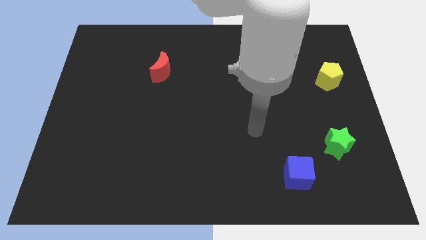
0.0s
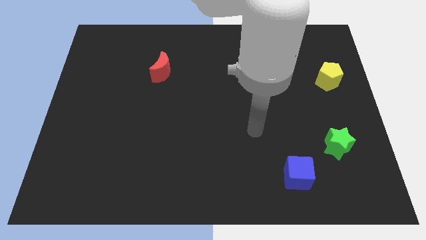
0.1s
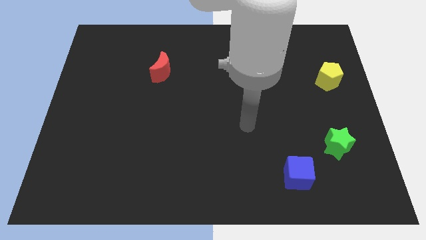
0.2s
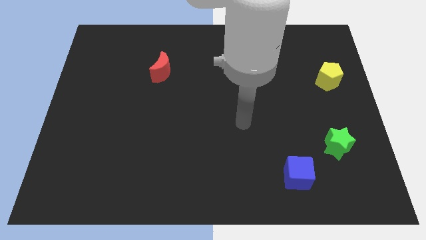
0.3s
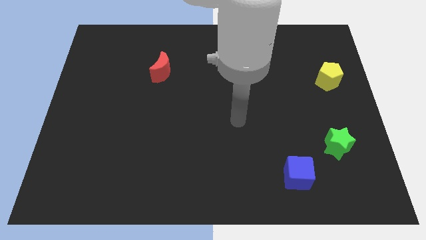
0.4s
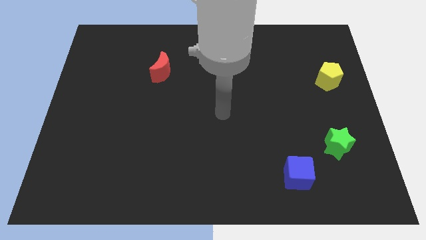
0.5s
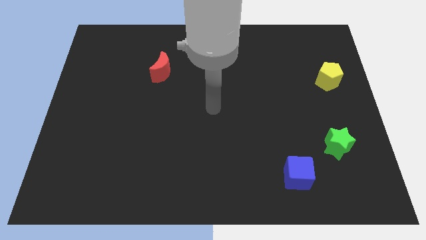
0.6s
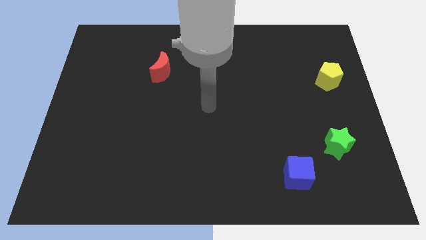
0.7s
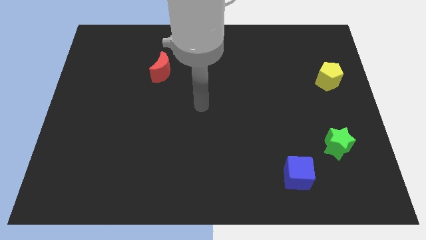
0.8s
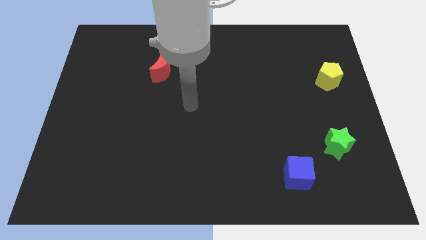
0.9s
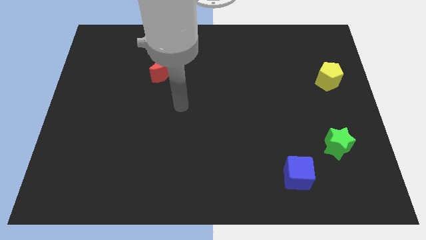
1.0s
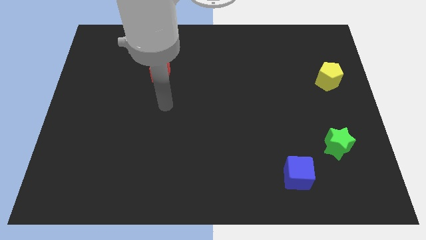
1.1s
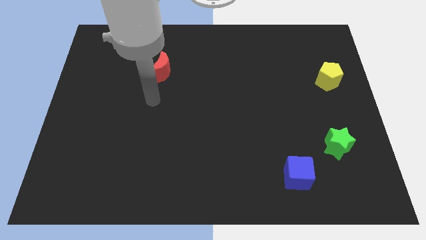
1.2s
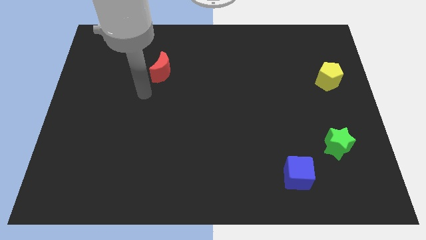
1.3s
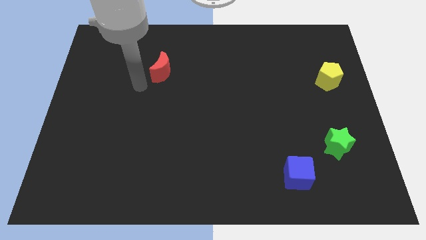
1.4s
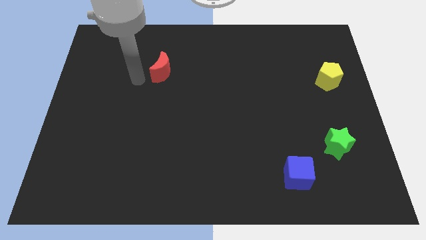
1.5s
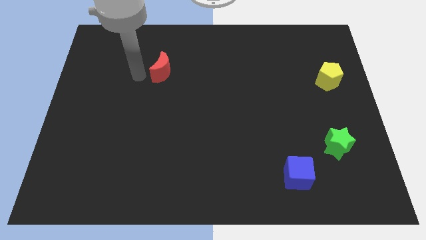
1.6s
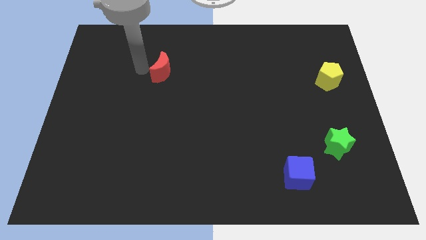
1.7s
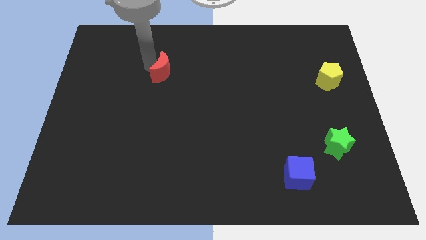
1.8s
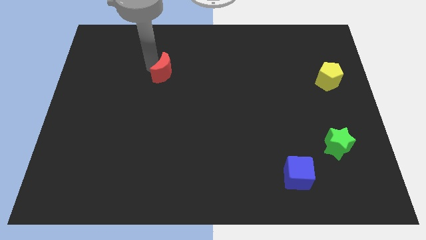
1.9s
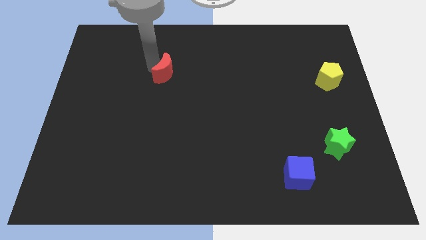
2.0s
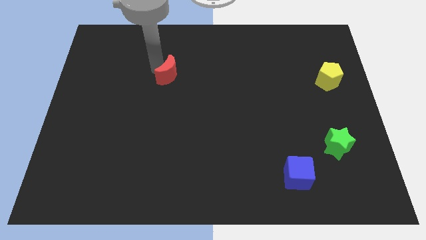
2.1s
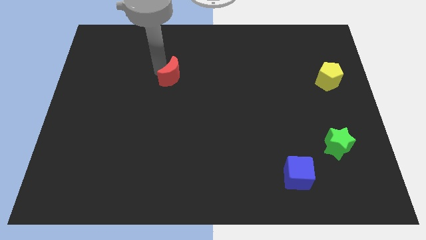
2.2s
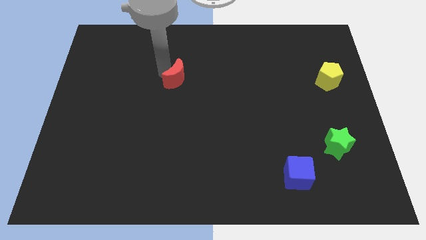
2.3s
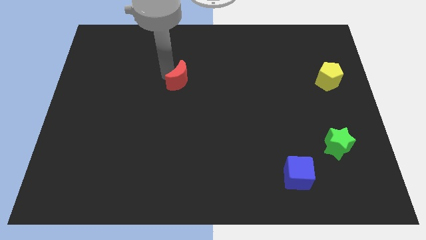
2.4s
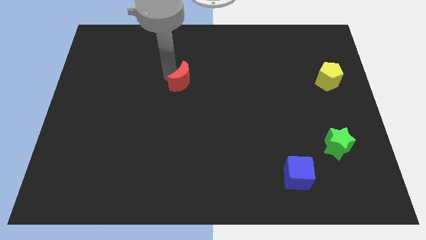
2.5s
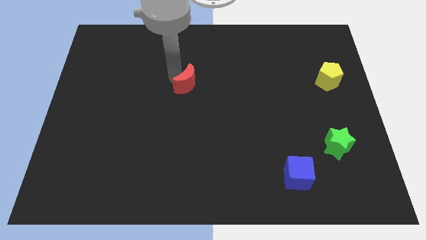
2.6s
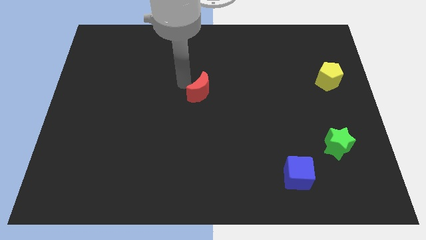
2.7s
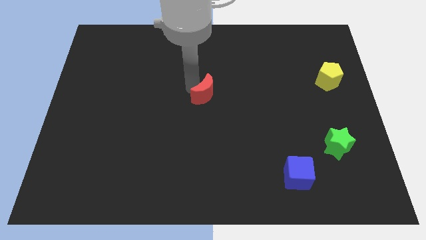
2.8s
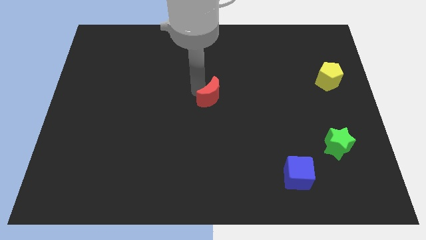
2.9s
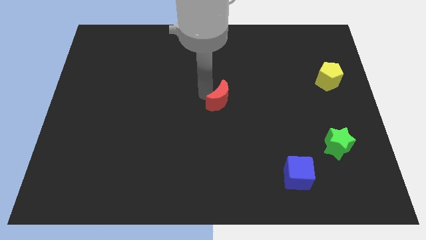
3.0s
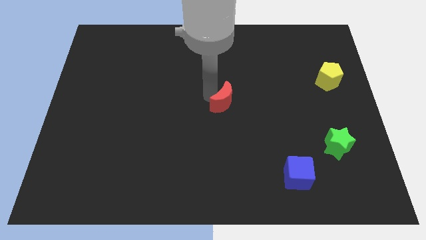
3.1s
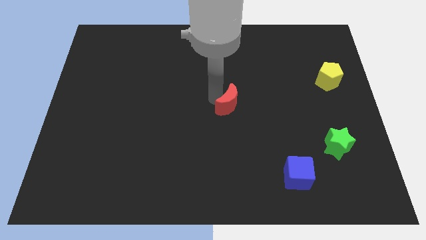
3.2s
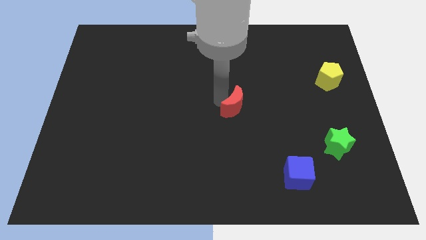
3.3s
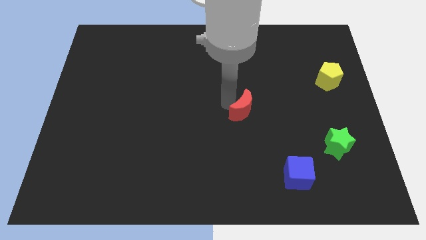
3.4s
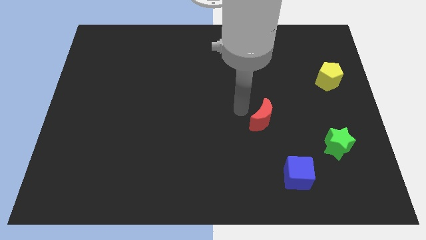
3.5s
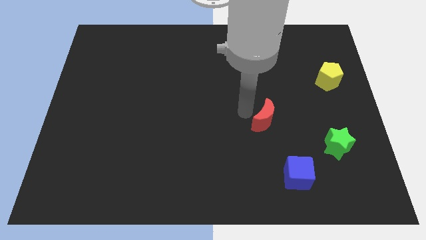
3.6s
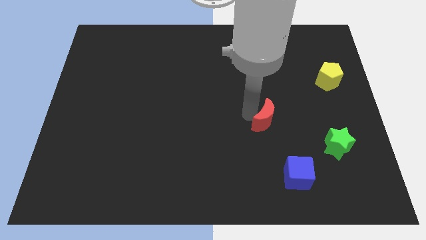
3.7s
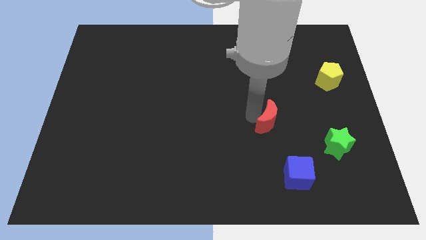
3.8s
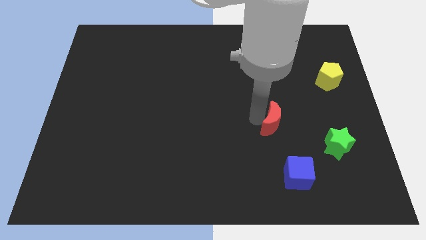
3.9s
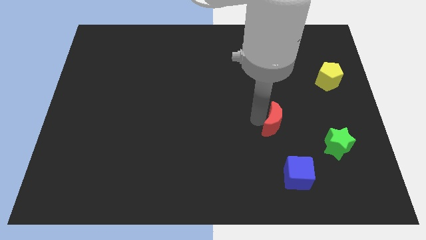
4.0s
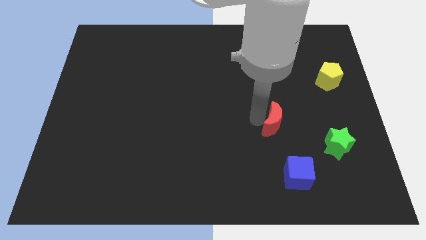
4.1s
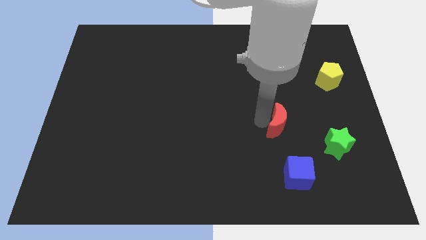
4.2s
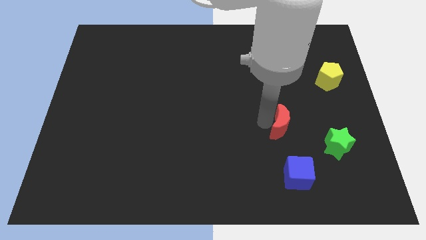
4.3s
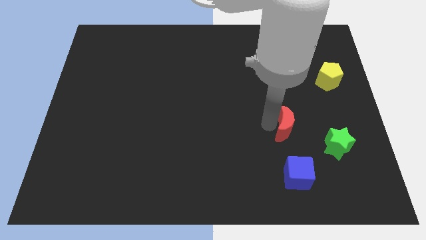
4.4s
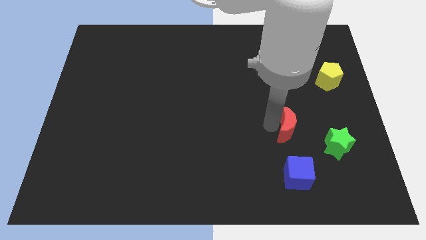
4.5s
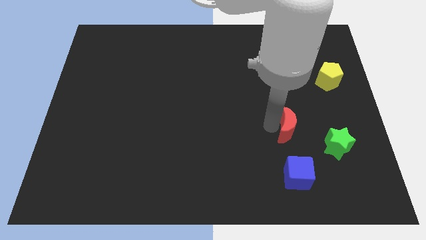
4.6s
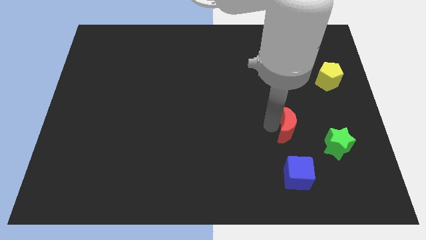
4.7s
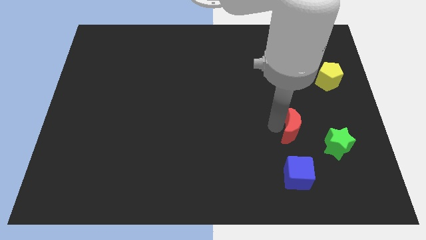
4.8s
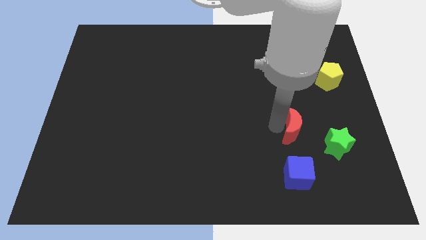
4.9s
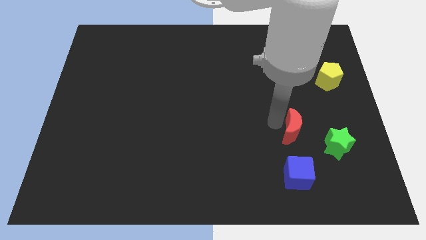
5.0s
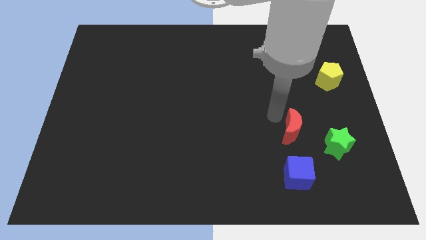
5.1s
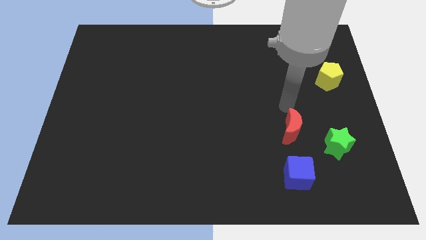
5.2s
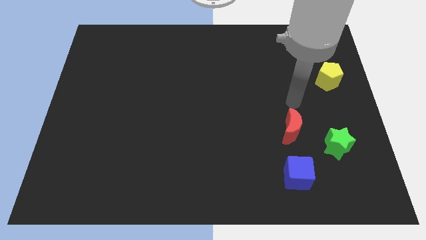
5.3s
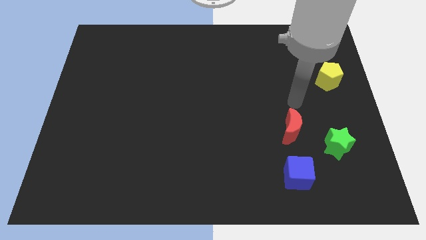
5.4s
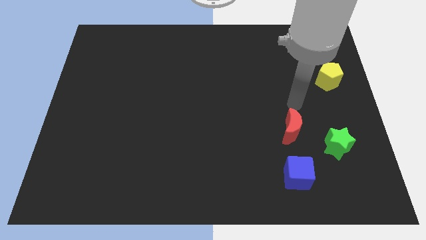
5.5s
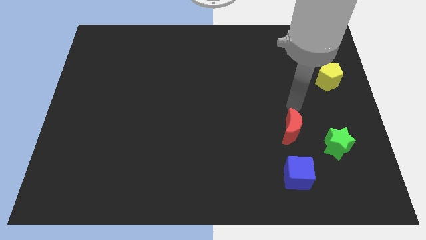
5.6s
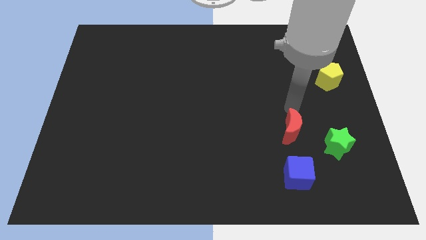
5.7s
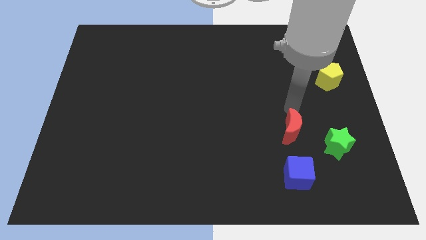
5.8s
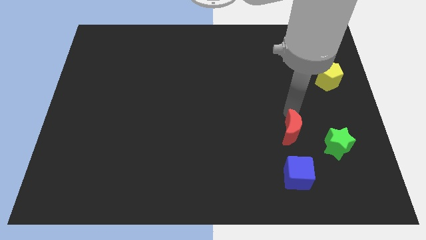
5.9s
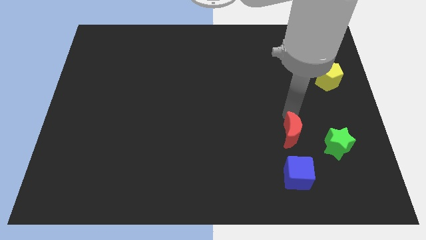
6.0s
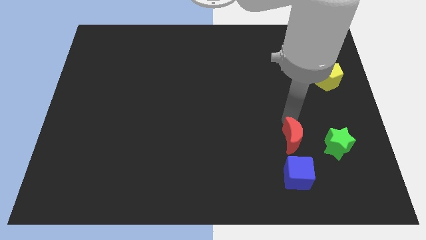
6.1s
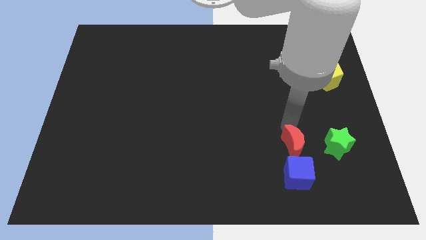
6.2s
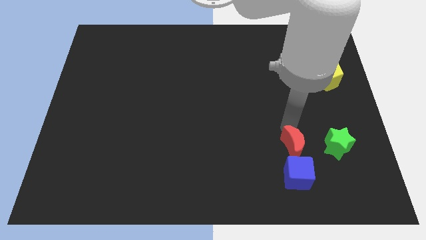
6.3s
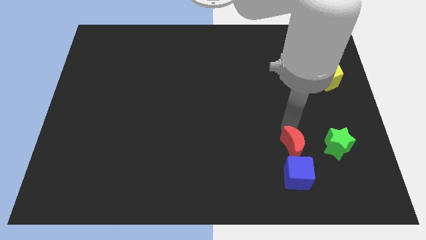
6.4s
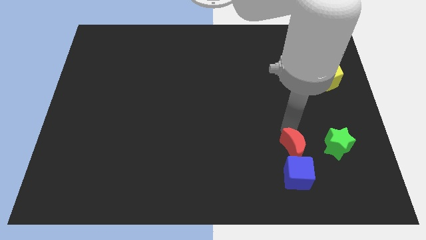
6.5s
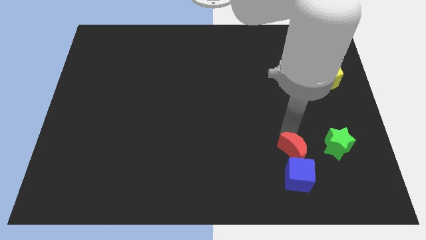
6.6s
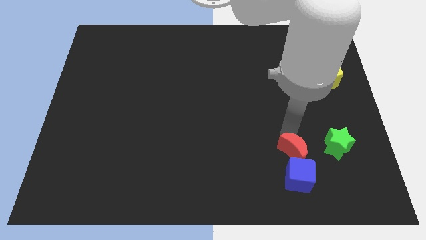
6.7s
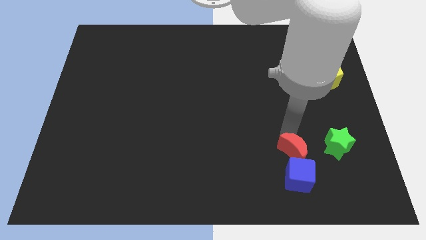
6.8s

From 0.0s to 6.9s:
put the red moon towards the cube

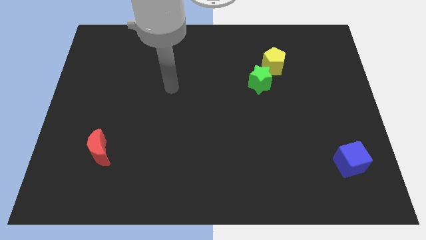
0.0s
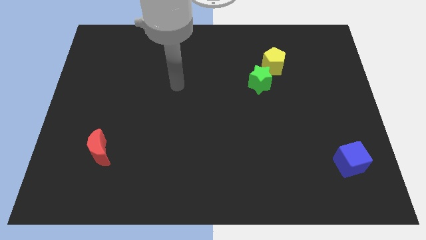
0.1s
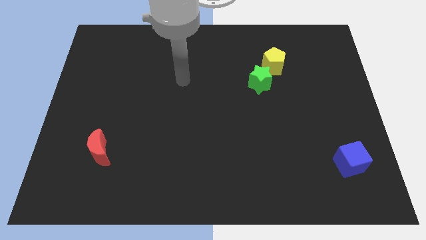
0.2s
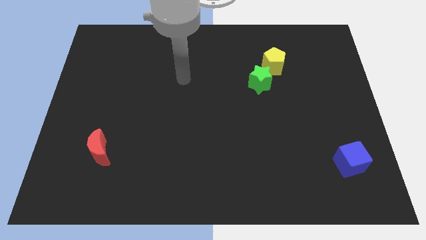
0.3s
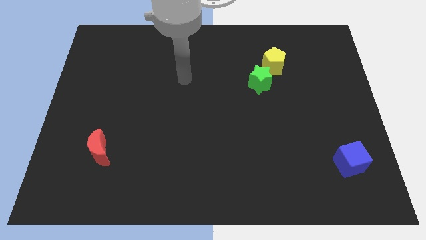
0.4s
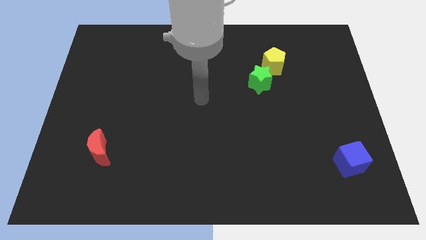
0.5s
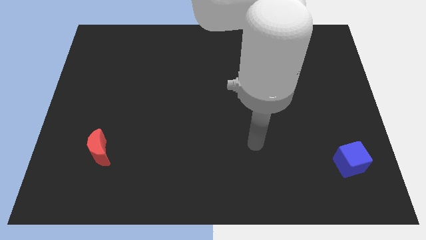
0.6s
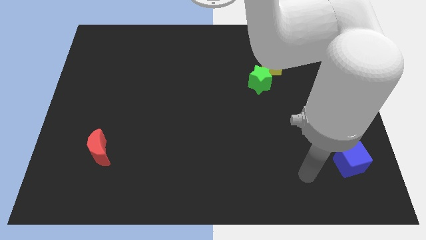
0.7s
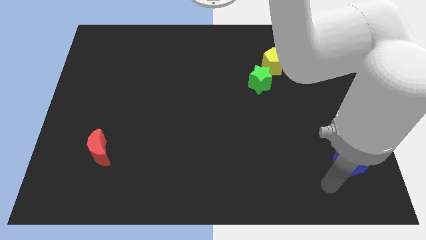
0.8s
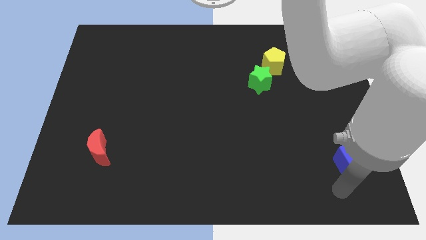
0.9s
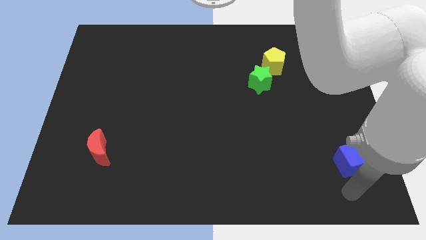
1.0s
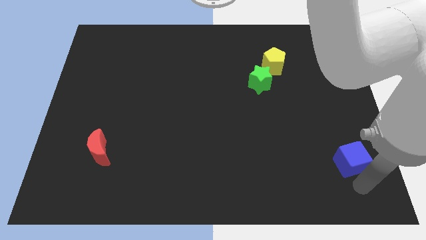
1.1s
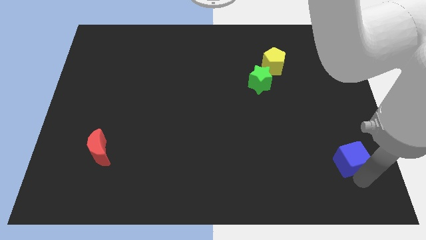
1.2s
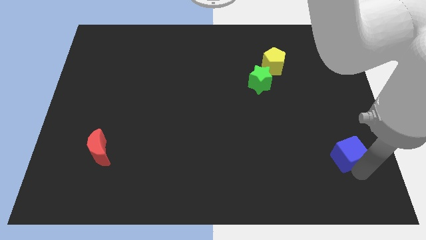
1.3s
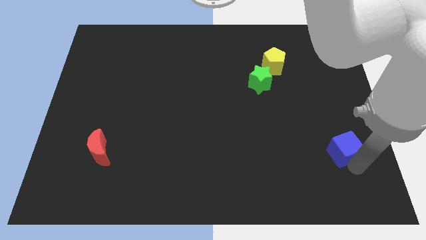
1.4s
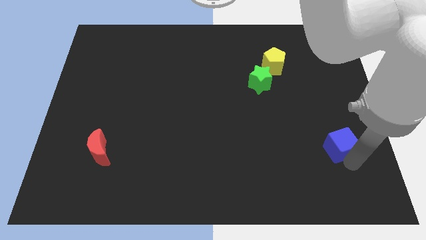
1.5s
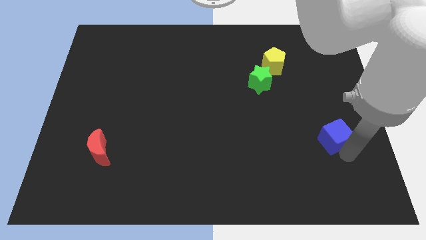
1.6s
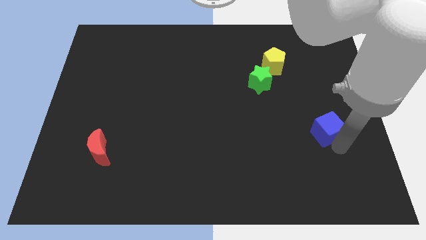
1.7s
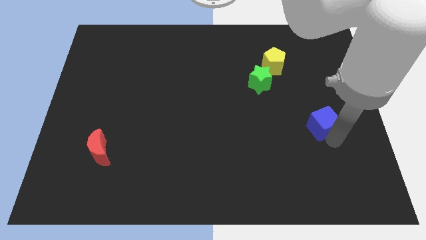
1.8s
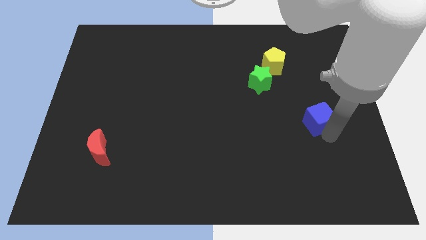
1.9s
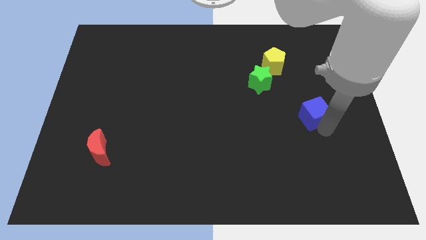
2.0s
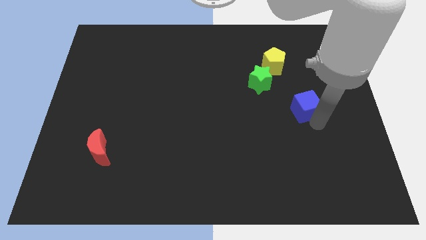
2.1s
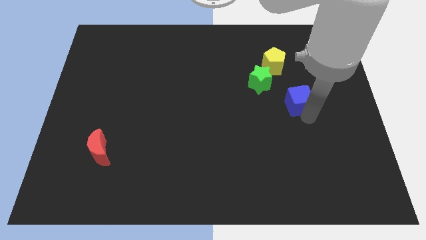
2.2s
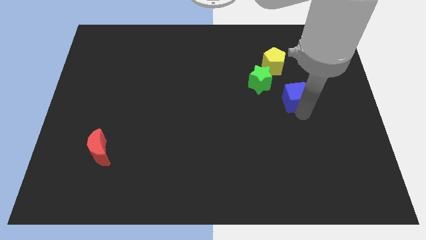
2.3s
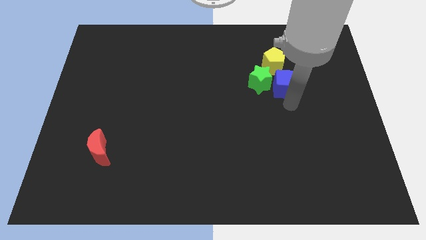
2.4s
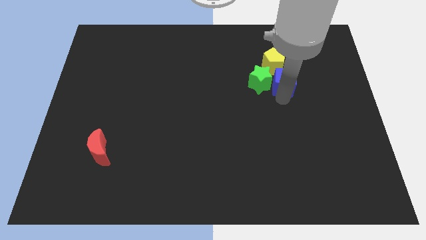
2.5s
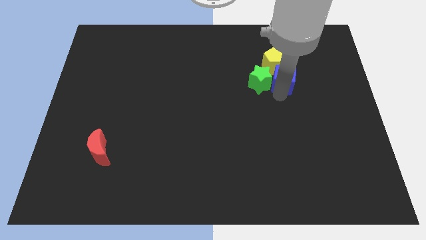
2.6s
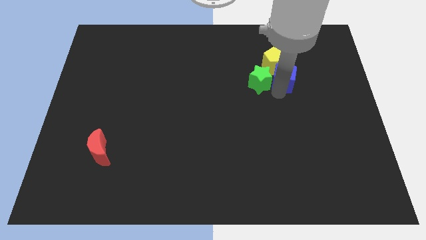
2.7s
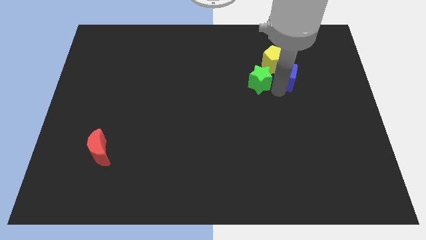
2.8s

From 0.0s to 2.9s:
put the cube towards the pentagon
